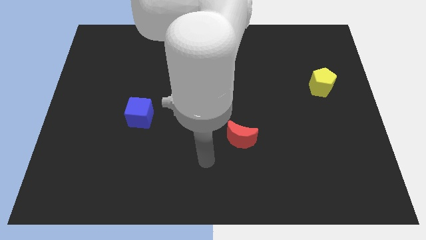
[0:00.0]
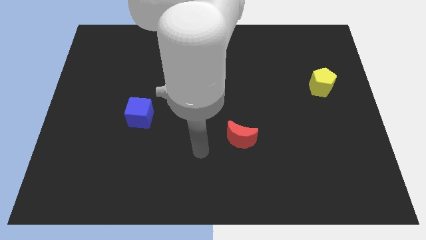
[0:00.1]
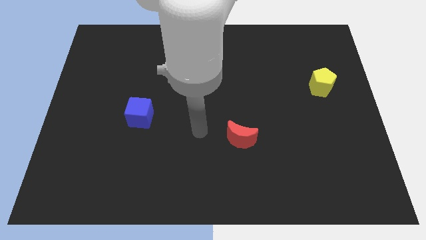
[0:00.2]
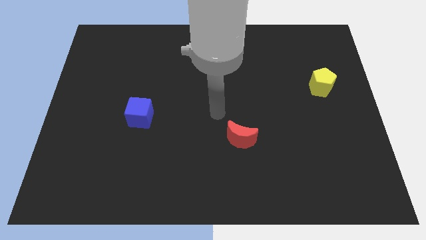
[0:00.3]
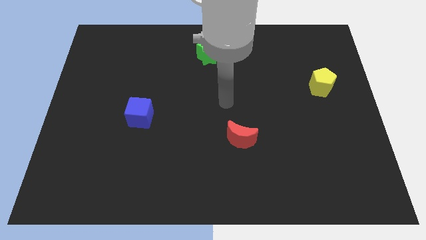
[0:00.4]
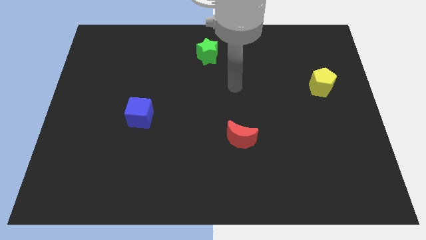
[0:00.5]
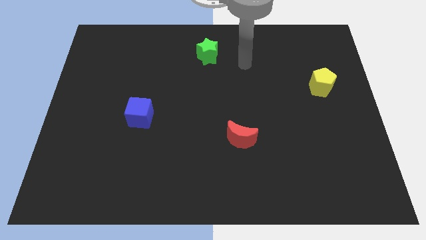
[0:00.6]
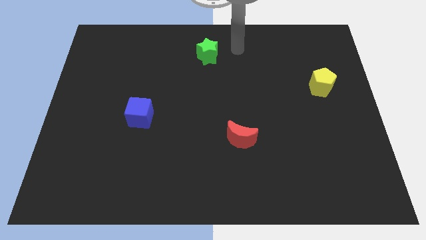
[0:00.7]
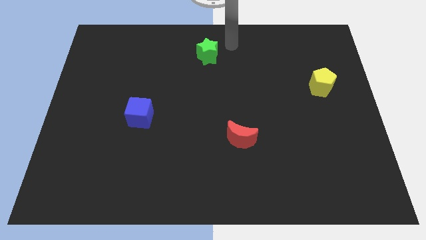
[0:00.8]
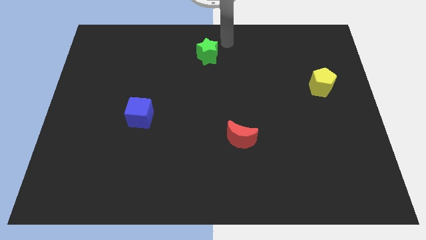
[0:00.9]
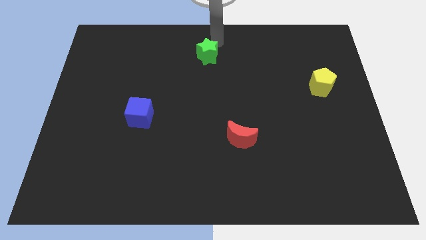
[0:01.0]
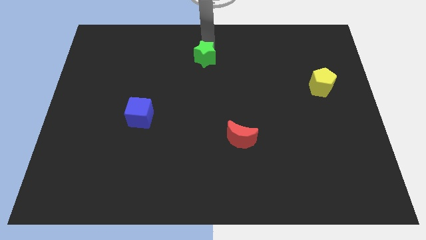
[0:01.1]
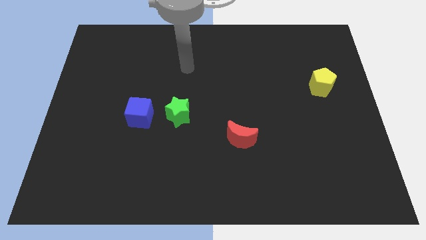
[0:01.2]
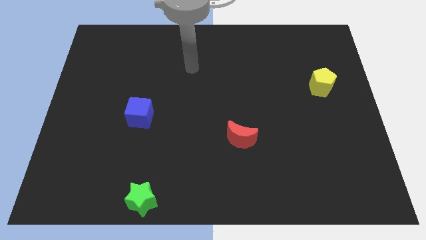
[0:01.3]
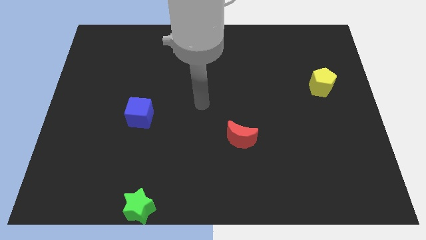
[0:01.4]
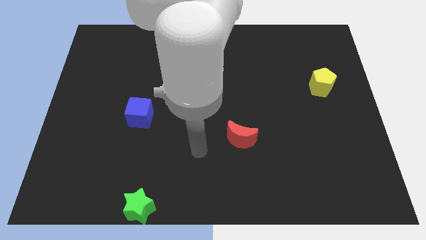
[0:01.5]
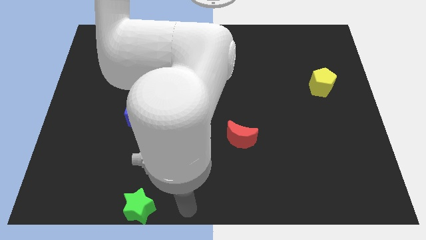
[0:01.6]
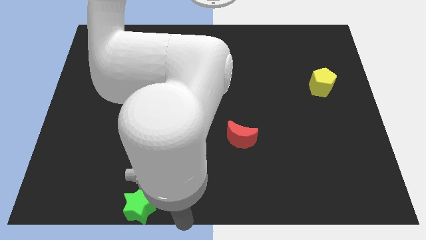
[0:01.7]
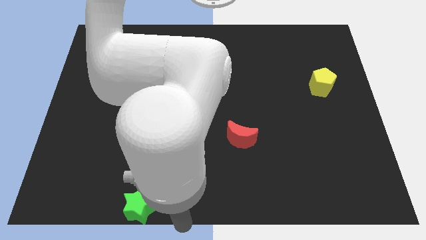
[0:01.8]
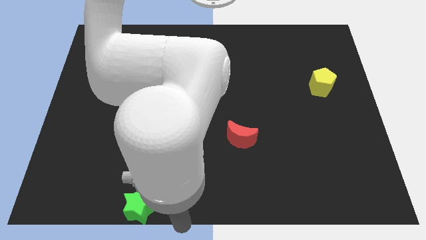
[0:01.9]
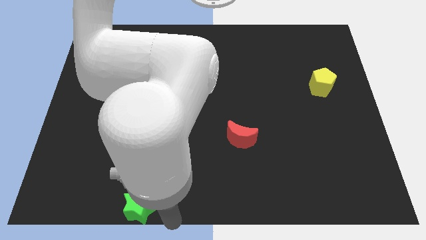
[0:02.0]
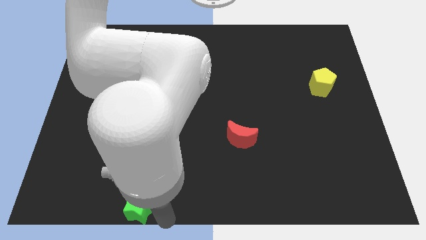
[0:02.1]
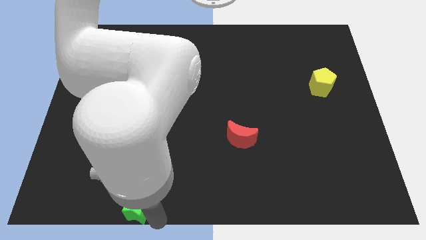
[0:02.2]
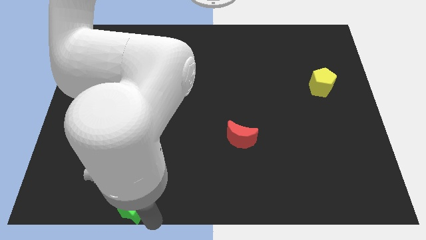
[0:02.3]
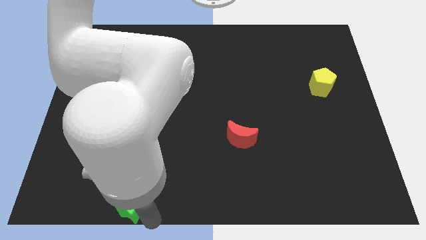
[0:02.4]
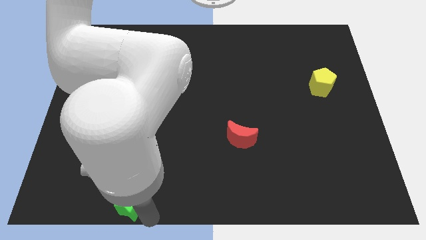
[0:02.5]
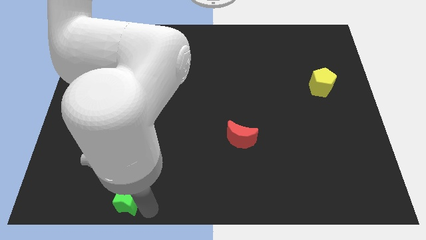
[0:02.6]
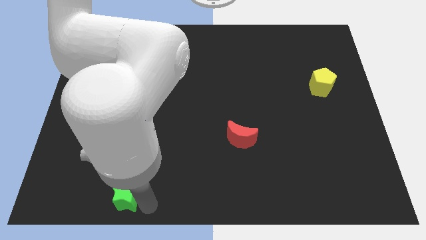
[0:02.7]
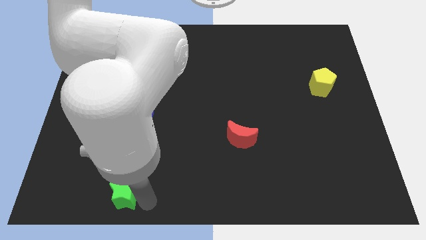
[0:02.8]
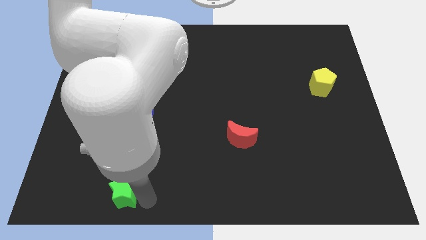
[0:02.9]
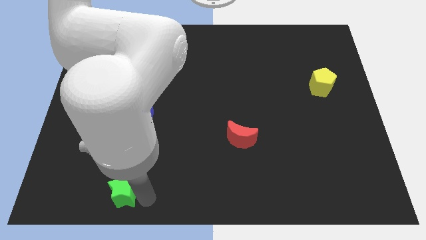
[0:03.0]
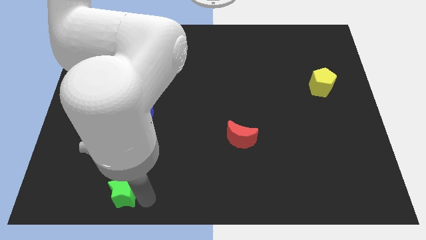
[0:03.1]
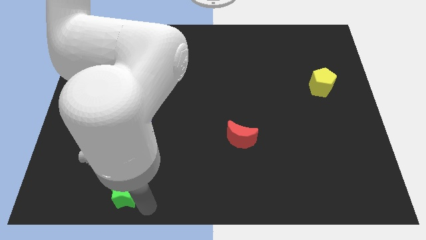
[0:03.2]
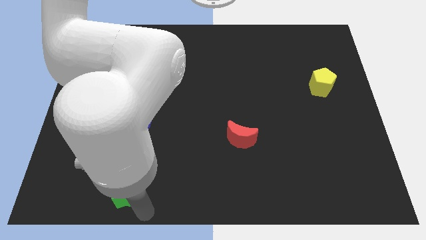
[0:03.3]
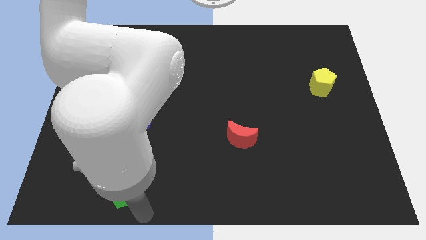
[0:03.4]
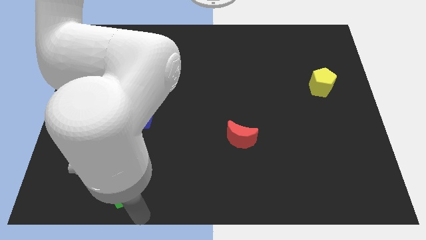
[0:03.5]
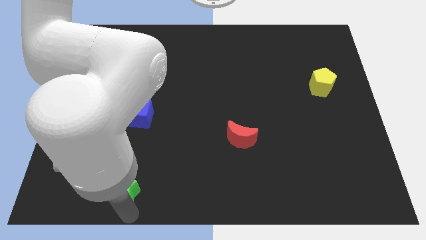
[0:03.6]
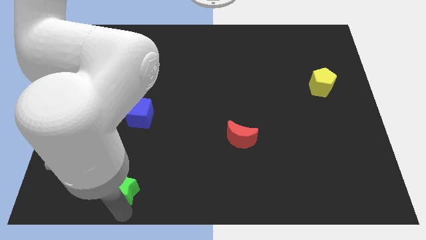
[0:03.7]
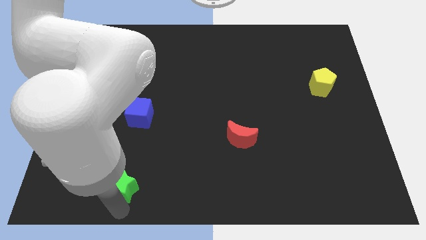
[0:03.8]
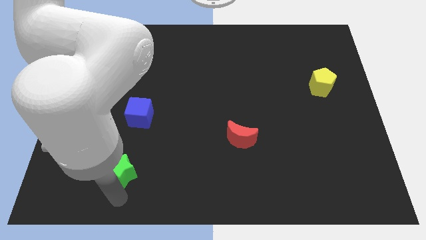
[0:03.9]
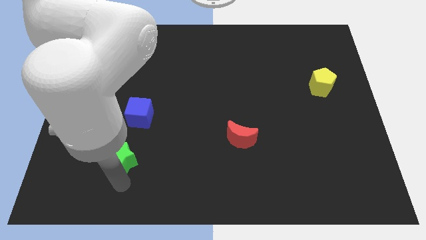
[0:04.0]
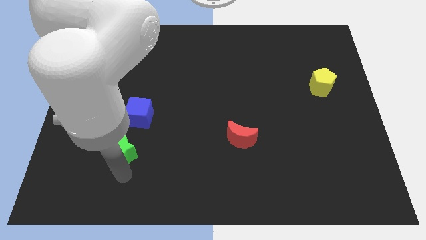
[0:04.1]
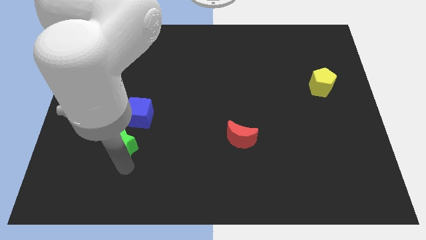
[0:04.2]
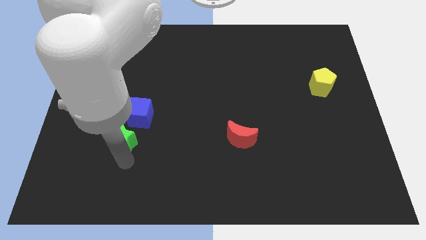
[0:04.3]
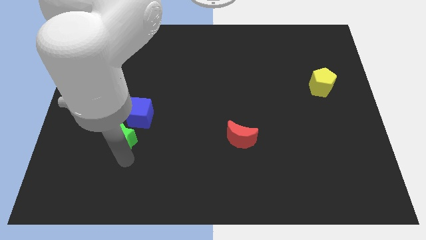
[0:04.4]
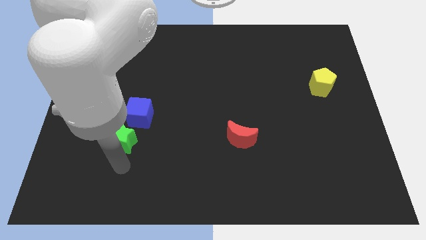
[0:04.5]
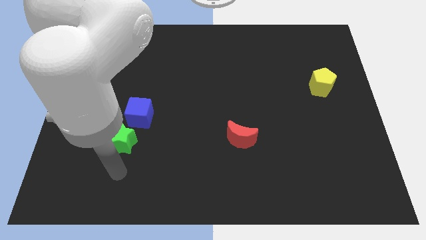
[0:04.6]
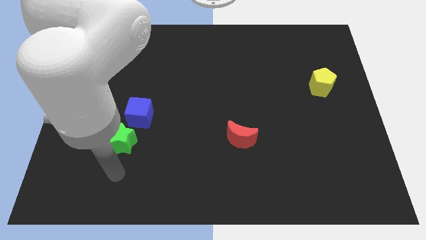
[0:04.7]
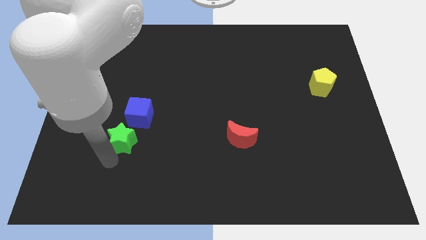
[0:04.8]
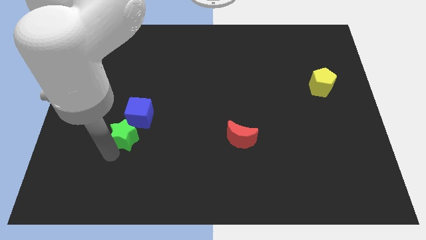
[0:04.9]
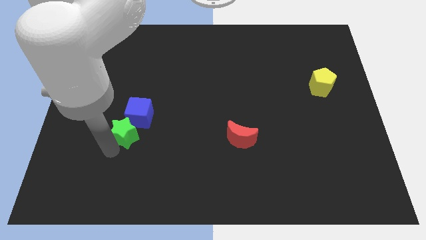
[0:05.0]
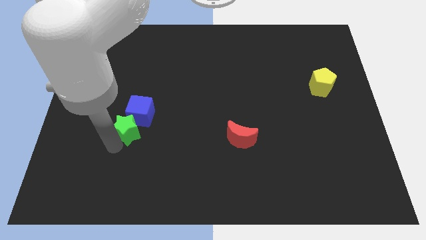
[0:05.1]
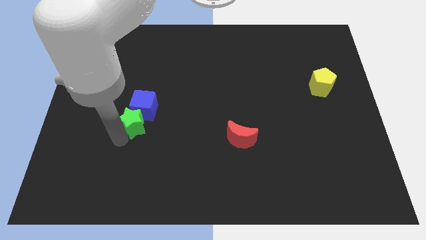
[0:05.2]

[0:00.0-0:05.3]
slide the star close to the cube

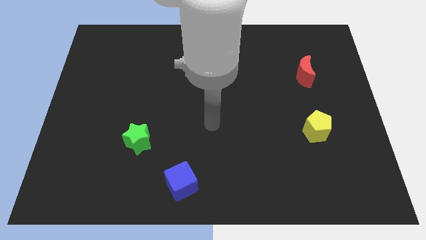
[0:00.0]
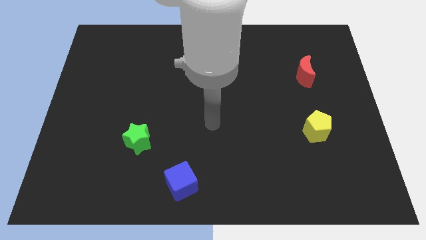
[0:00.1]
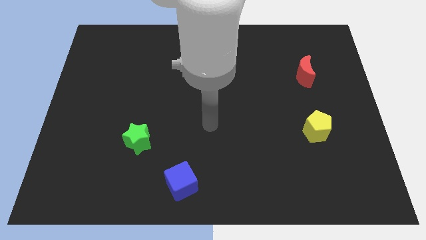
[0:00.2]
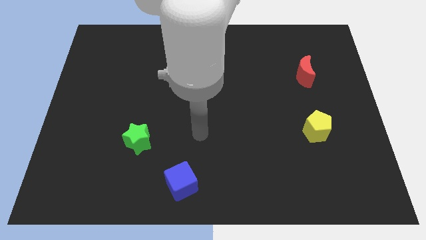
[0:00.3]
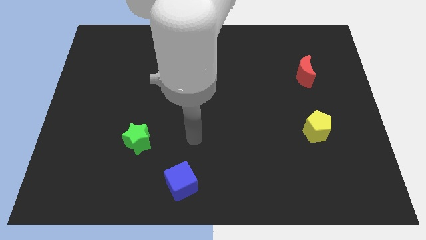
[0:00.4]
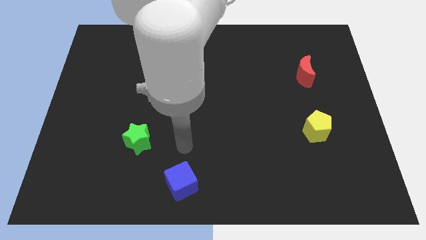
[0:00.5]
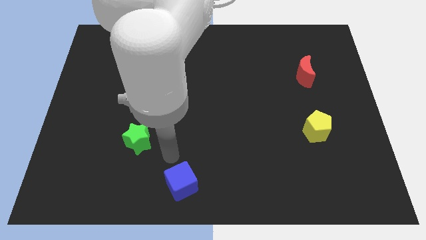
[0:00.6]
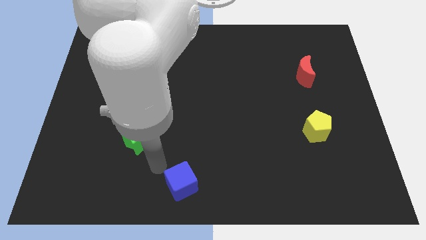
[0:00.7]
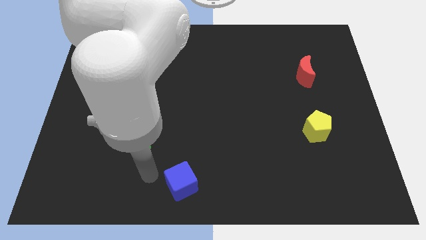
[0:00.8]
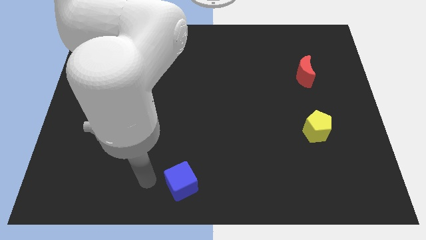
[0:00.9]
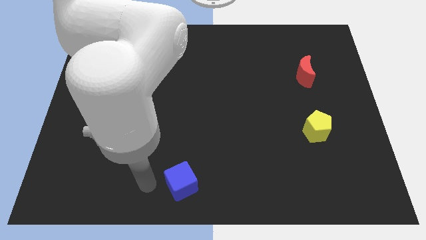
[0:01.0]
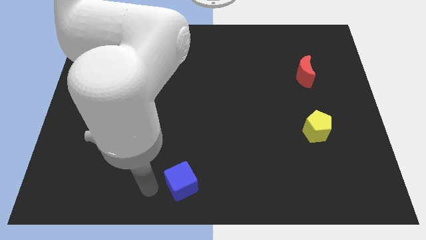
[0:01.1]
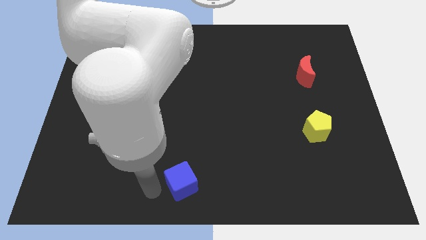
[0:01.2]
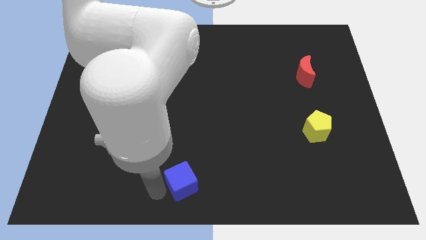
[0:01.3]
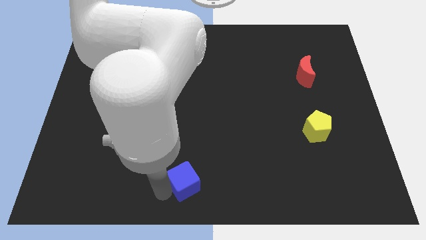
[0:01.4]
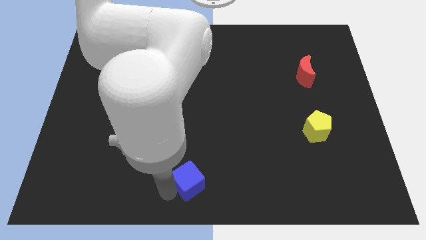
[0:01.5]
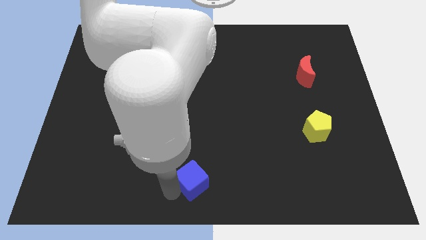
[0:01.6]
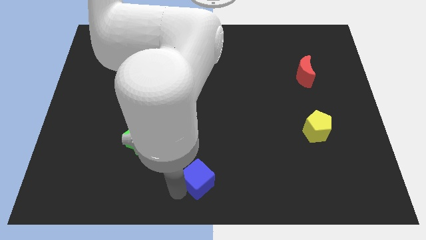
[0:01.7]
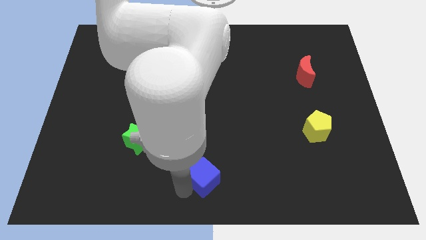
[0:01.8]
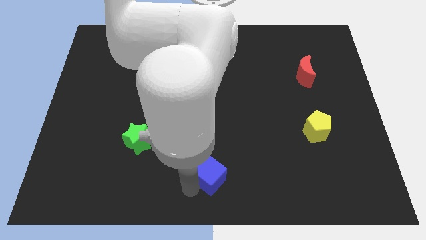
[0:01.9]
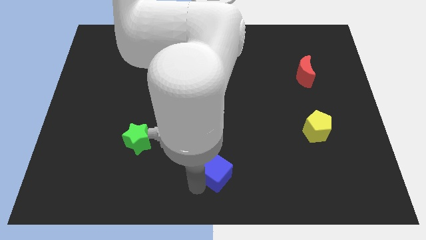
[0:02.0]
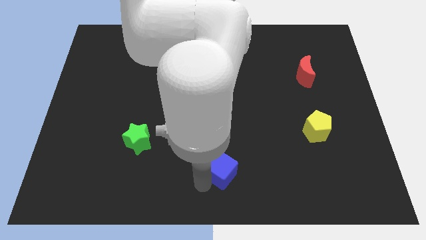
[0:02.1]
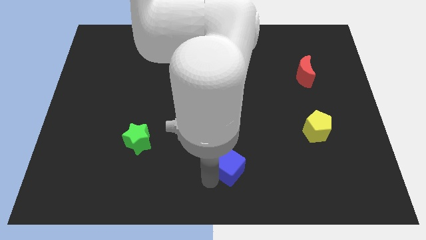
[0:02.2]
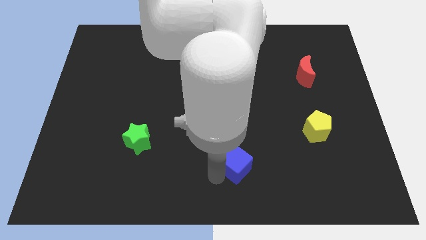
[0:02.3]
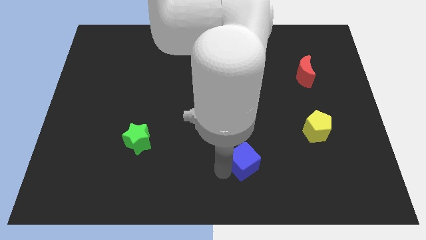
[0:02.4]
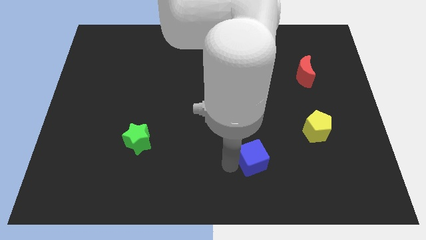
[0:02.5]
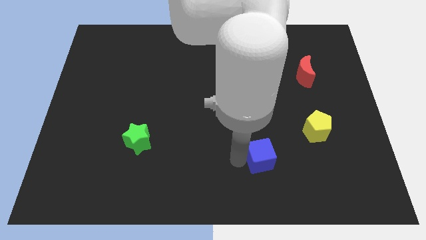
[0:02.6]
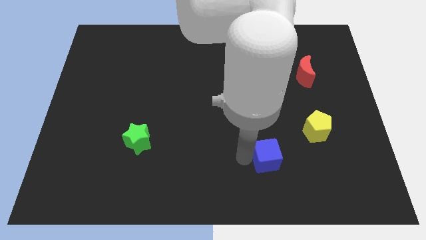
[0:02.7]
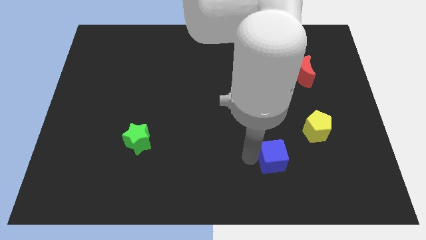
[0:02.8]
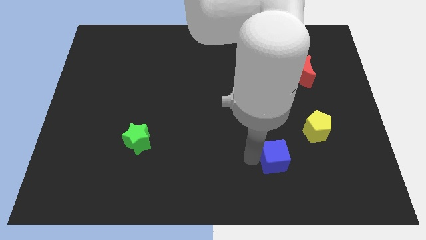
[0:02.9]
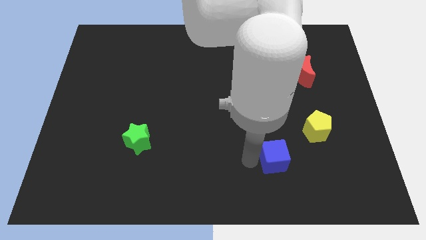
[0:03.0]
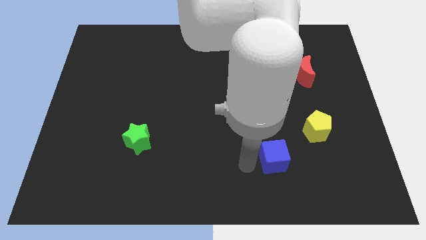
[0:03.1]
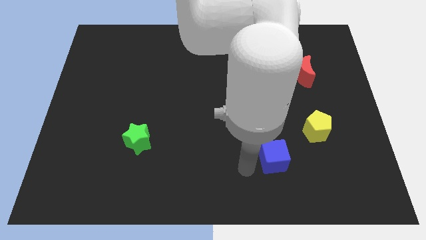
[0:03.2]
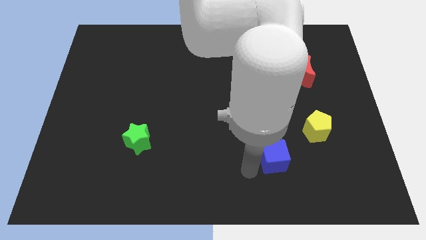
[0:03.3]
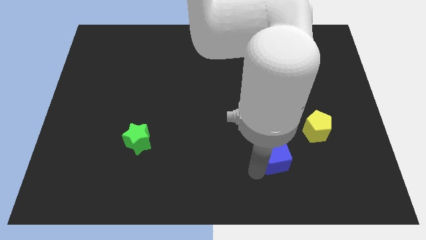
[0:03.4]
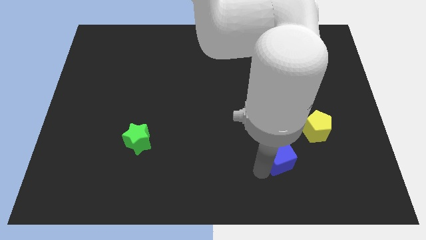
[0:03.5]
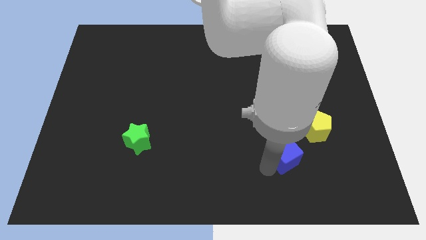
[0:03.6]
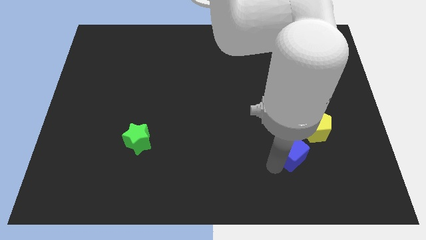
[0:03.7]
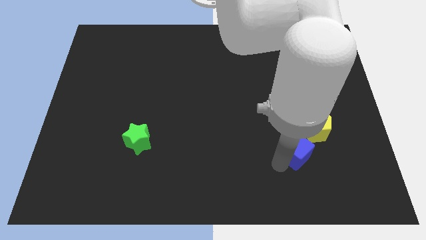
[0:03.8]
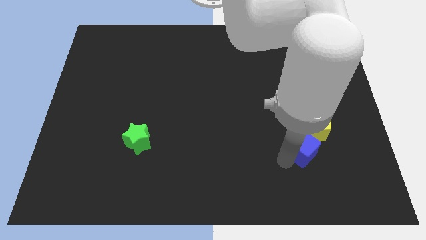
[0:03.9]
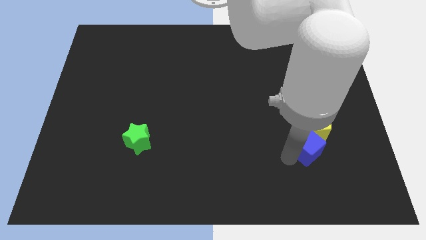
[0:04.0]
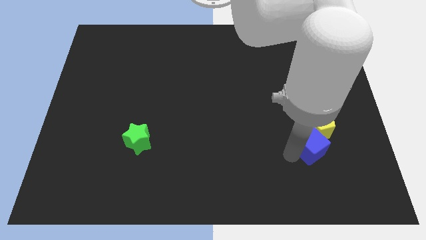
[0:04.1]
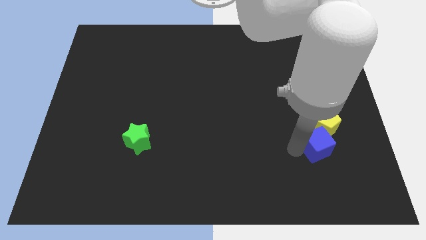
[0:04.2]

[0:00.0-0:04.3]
put the blue block next to the yellow pentagon
